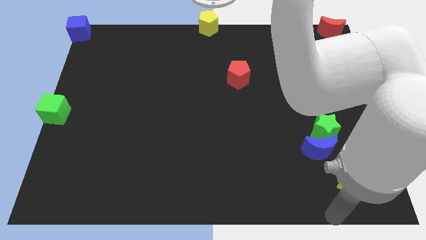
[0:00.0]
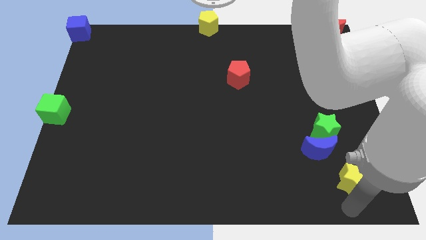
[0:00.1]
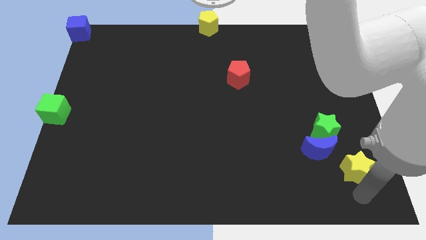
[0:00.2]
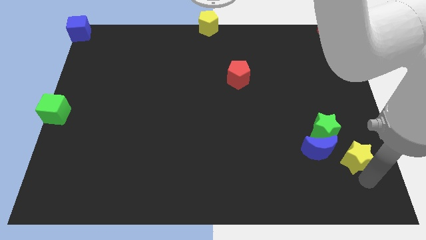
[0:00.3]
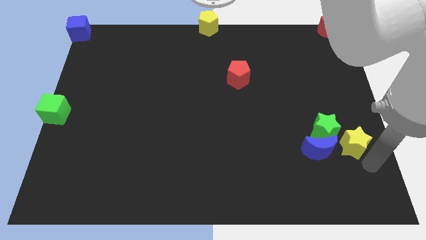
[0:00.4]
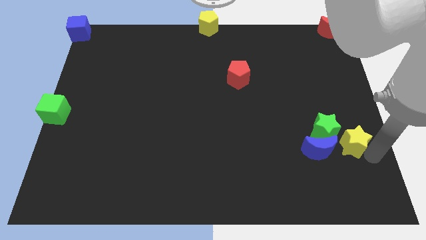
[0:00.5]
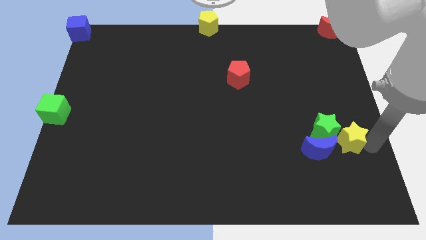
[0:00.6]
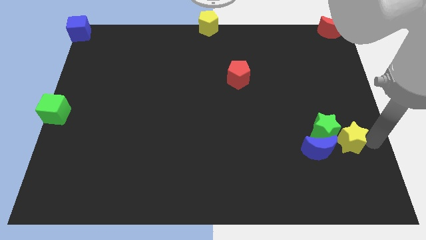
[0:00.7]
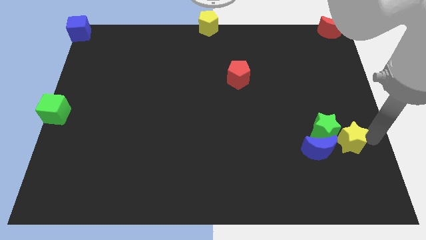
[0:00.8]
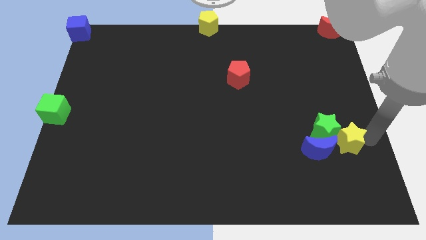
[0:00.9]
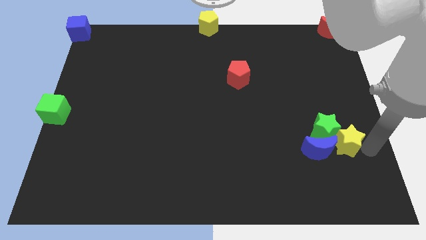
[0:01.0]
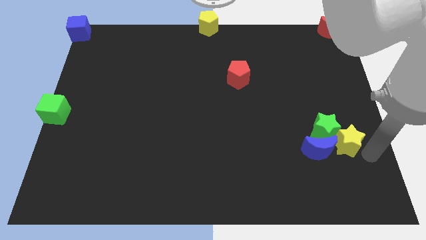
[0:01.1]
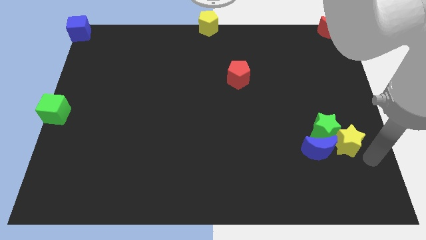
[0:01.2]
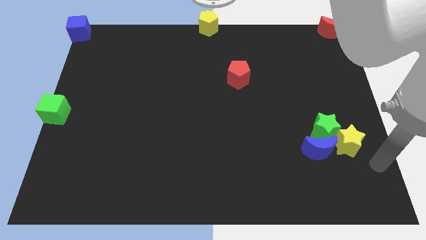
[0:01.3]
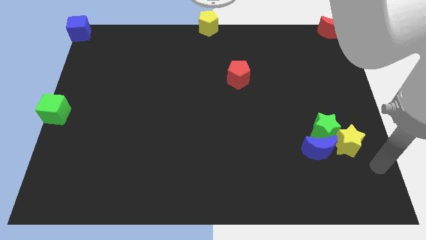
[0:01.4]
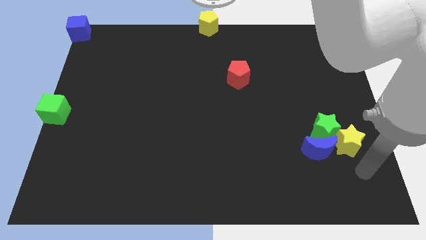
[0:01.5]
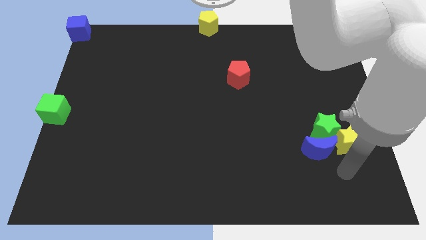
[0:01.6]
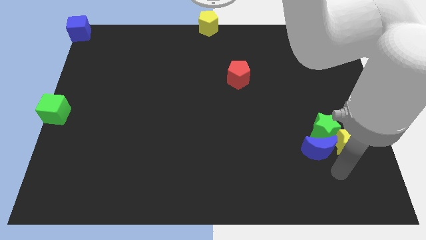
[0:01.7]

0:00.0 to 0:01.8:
place the yellow star right to the green star

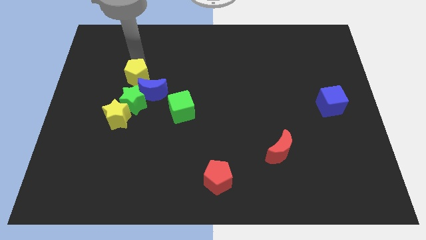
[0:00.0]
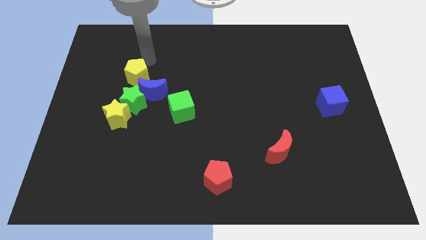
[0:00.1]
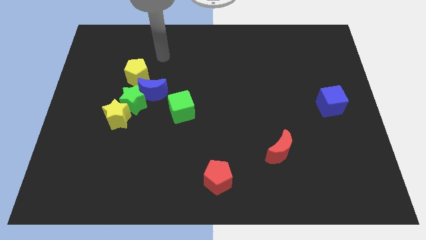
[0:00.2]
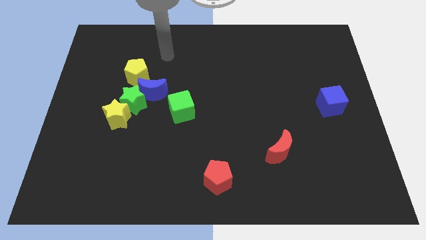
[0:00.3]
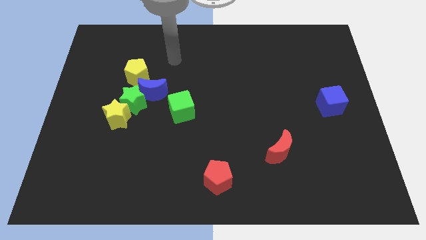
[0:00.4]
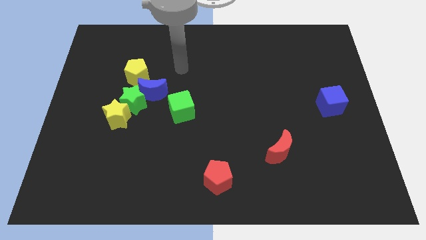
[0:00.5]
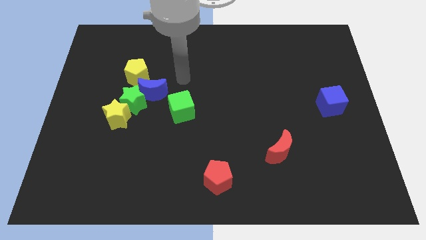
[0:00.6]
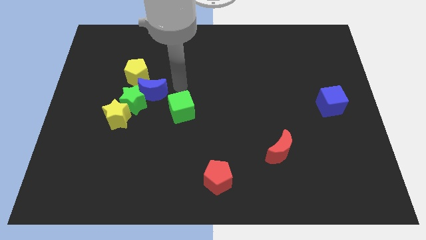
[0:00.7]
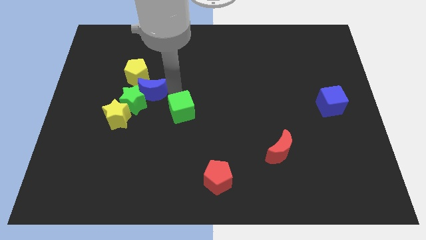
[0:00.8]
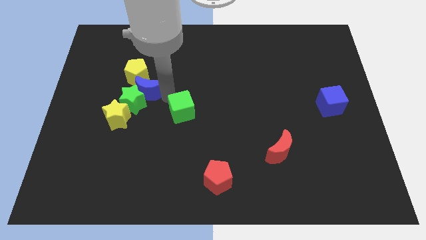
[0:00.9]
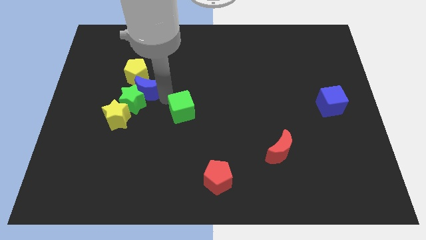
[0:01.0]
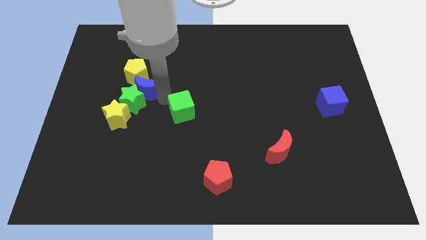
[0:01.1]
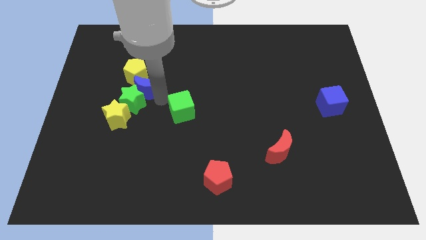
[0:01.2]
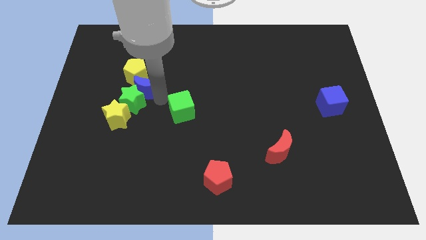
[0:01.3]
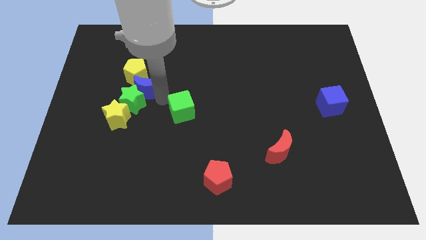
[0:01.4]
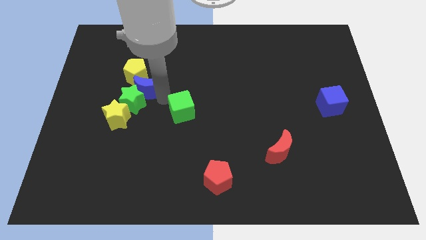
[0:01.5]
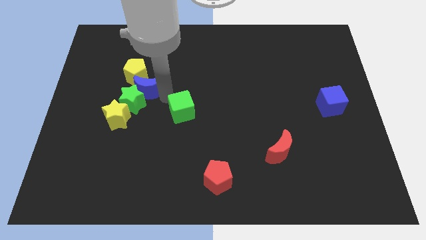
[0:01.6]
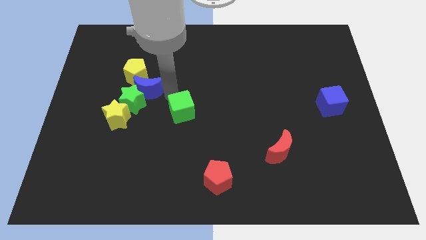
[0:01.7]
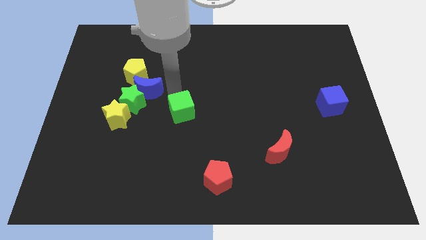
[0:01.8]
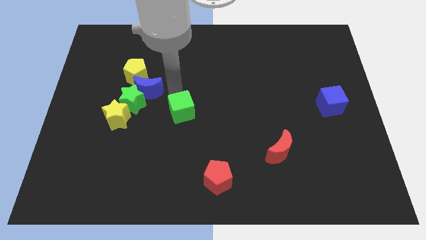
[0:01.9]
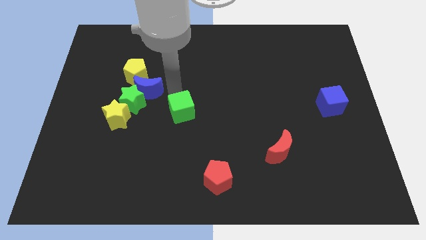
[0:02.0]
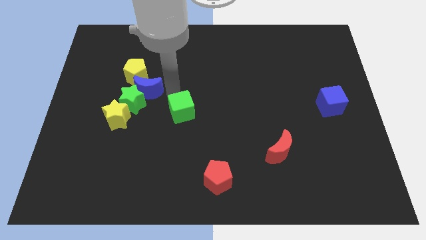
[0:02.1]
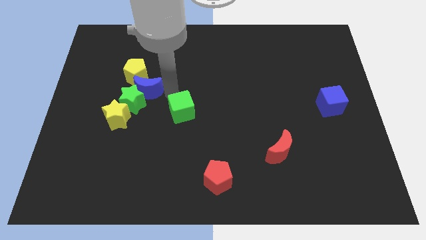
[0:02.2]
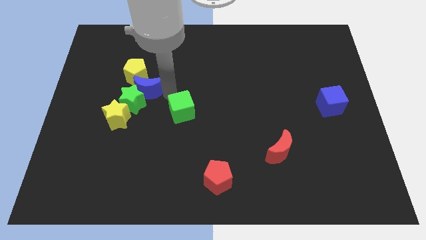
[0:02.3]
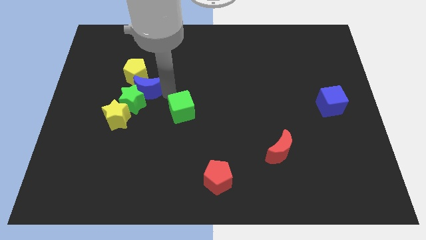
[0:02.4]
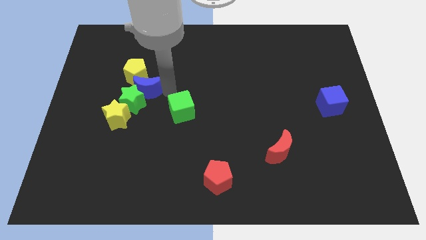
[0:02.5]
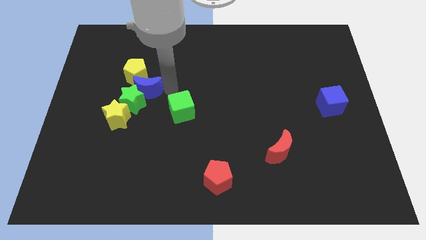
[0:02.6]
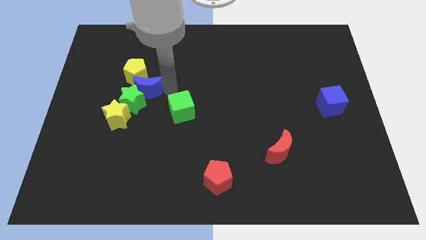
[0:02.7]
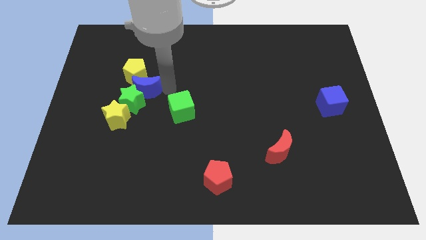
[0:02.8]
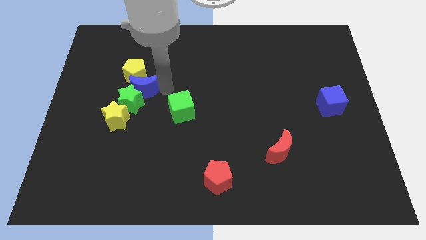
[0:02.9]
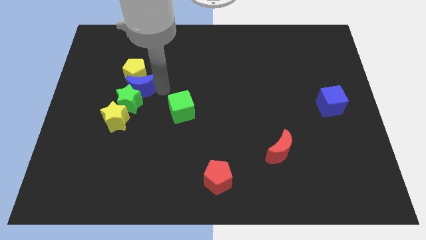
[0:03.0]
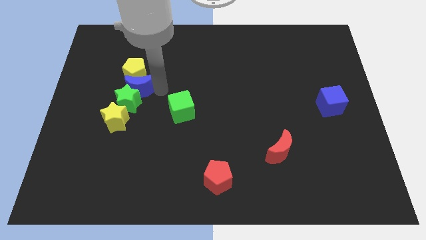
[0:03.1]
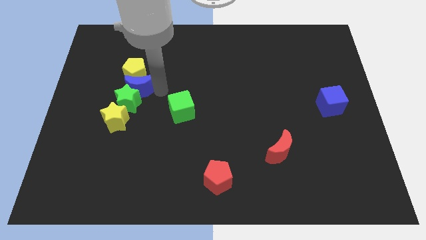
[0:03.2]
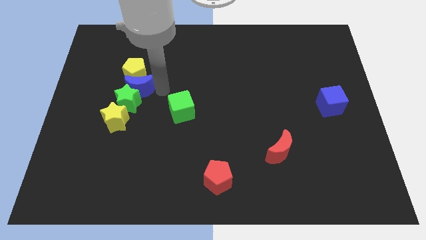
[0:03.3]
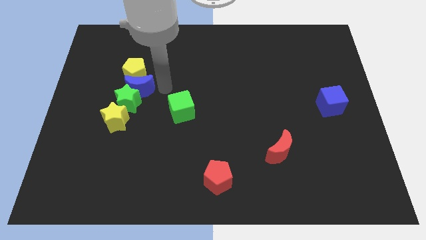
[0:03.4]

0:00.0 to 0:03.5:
separate the blue moon from the green cube

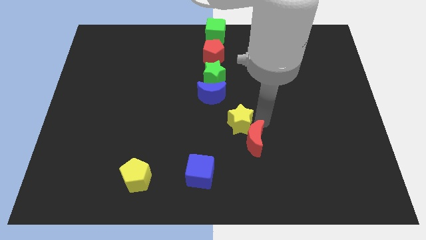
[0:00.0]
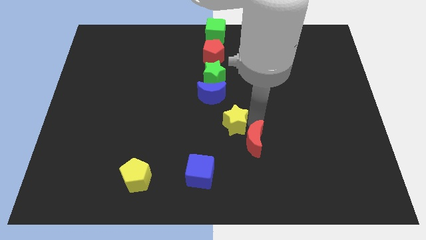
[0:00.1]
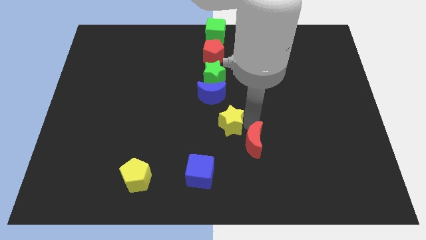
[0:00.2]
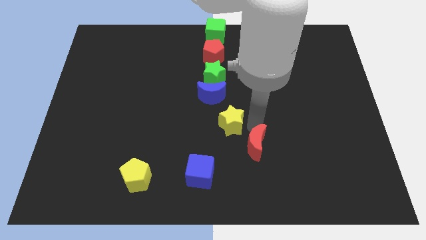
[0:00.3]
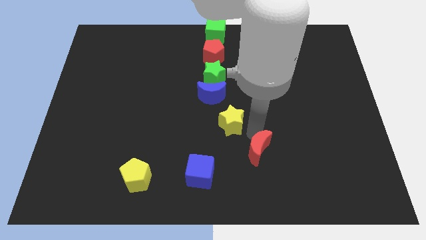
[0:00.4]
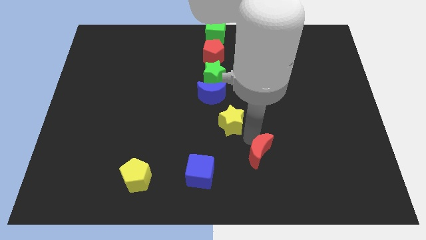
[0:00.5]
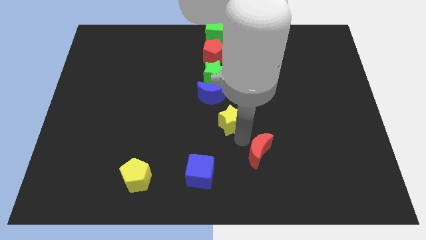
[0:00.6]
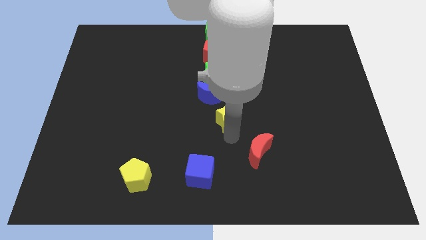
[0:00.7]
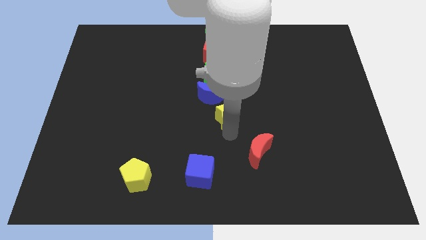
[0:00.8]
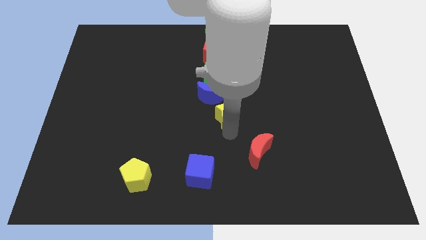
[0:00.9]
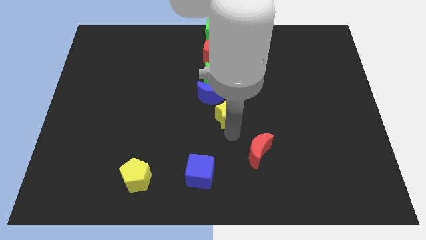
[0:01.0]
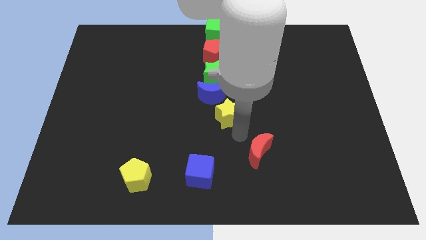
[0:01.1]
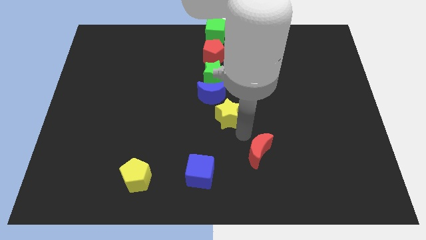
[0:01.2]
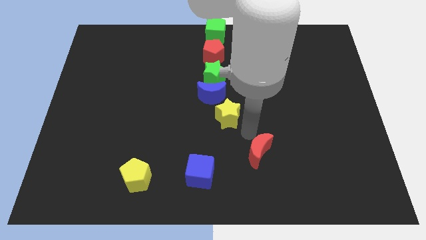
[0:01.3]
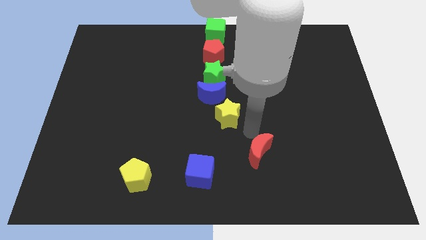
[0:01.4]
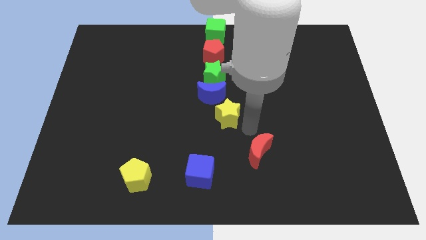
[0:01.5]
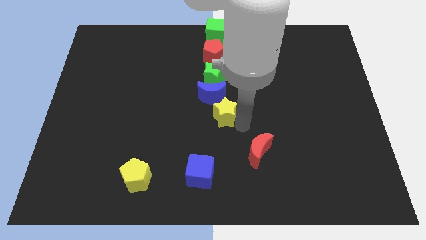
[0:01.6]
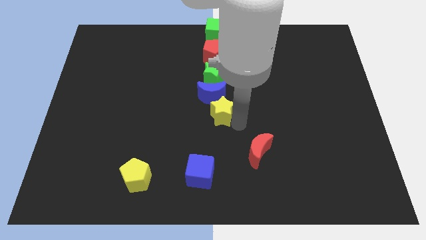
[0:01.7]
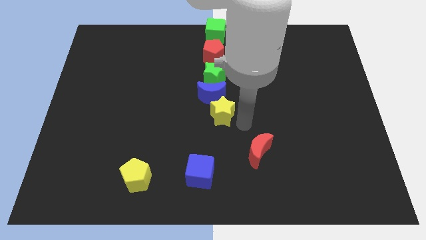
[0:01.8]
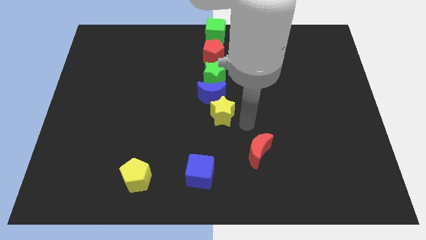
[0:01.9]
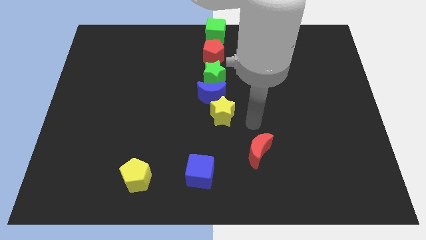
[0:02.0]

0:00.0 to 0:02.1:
move yellow star into blue moon

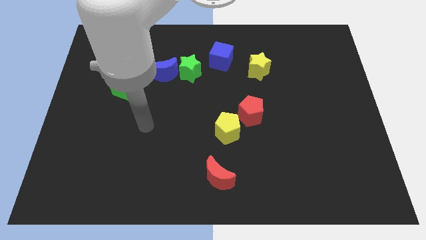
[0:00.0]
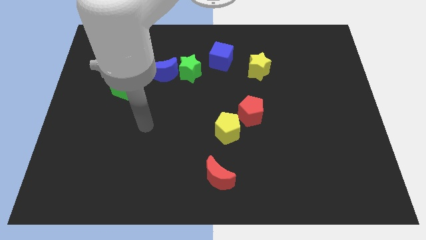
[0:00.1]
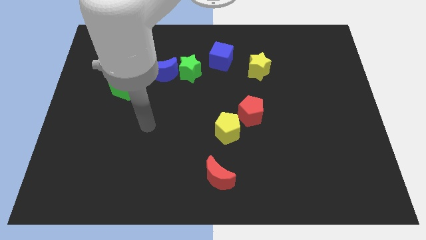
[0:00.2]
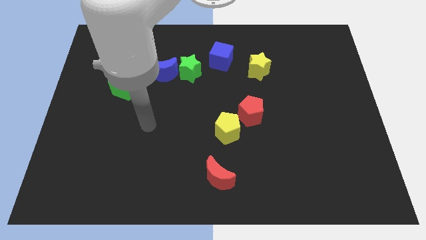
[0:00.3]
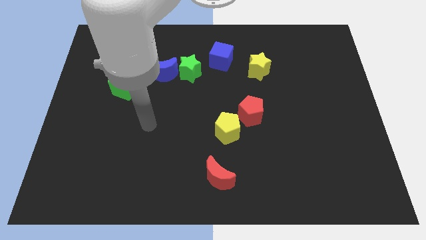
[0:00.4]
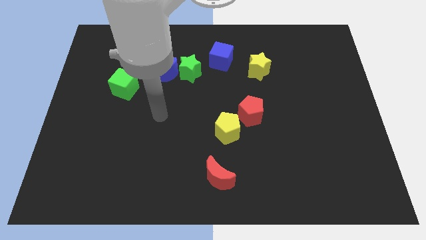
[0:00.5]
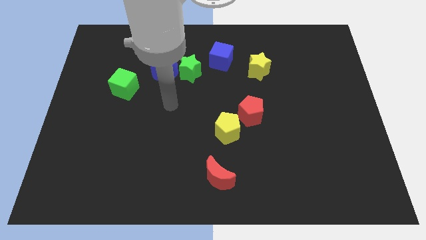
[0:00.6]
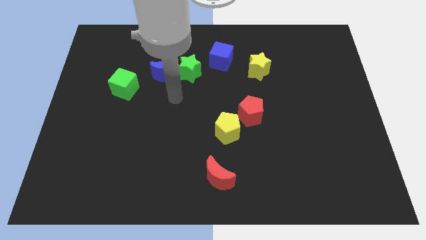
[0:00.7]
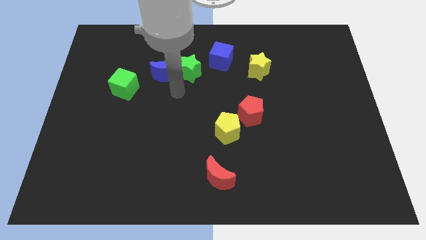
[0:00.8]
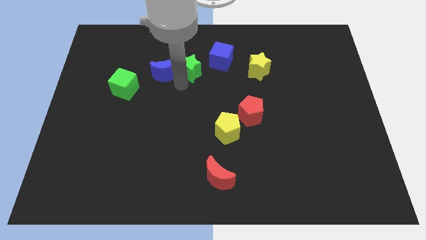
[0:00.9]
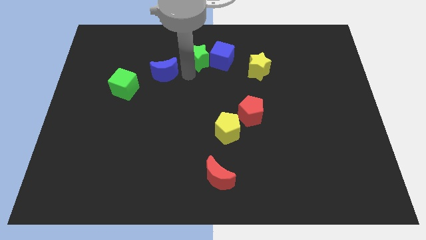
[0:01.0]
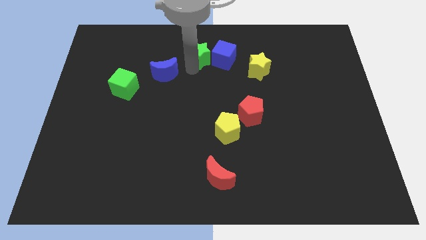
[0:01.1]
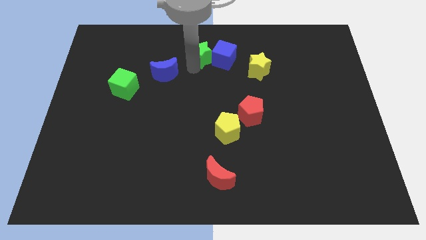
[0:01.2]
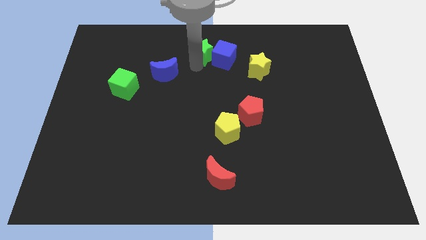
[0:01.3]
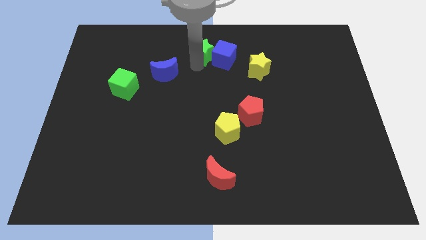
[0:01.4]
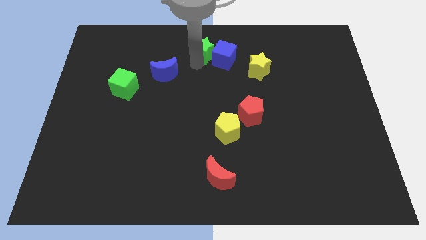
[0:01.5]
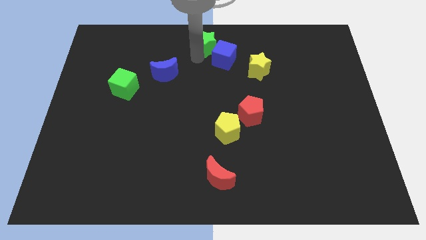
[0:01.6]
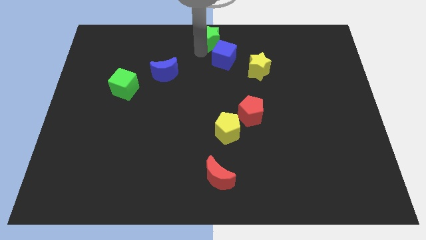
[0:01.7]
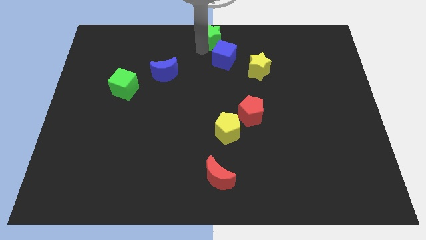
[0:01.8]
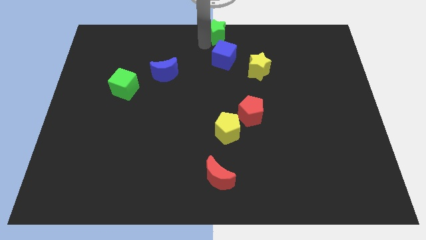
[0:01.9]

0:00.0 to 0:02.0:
place the arm below the green star
